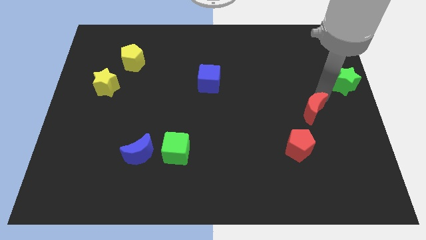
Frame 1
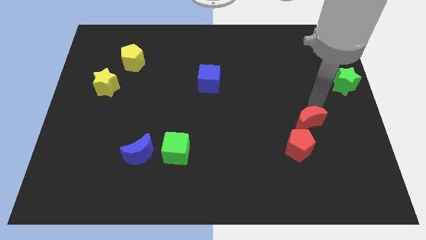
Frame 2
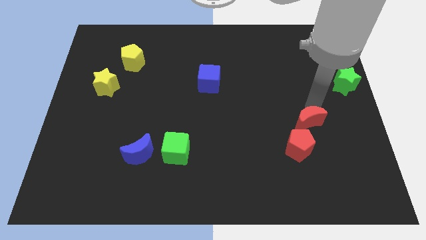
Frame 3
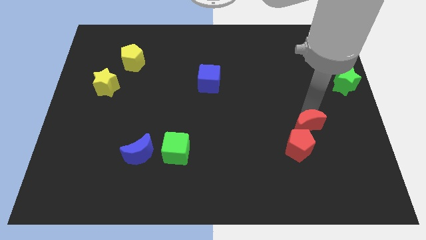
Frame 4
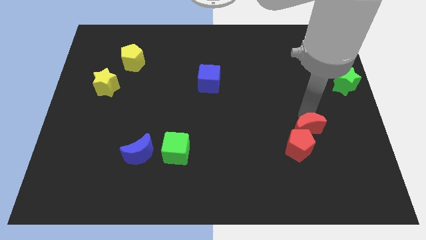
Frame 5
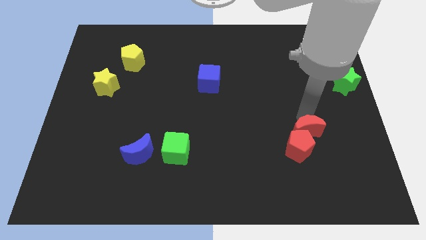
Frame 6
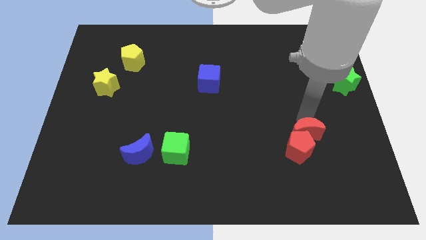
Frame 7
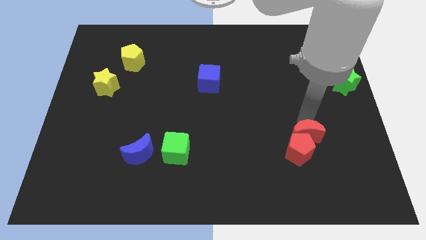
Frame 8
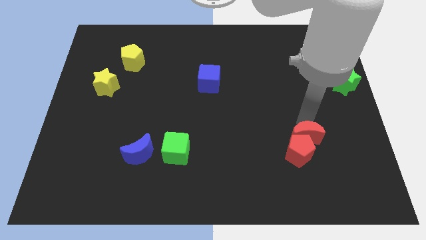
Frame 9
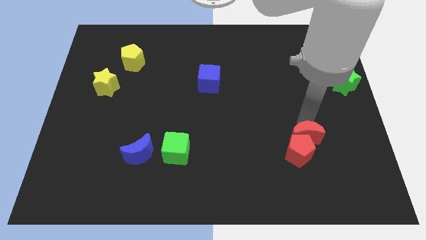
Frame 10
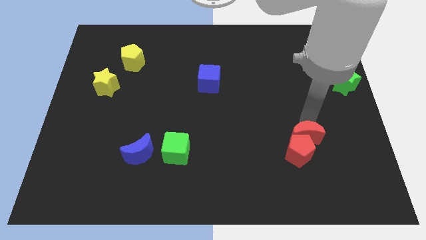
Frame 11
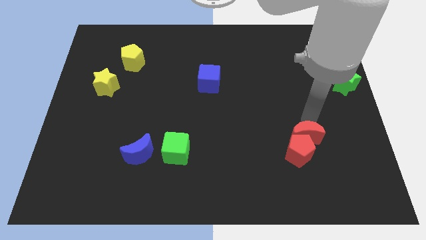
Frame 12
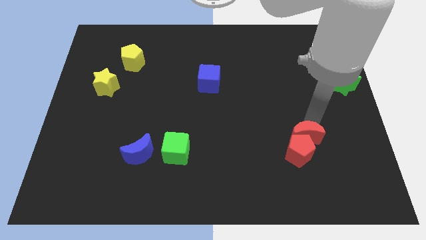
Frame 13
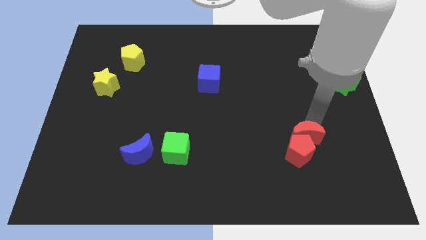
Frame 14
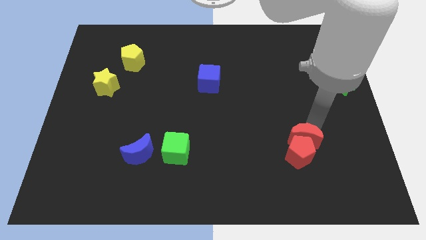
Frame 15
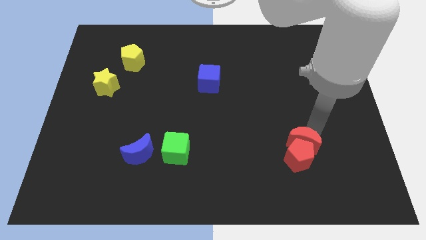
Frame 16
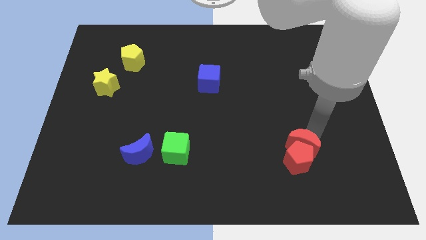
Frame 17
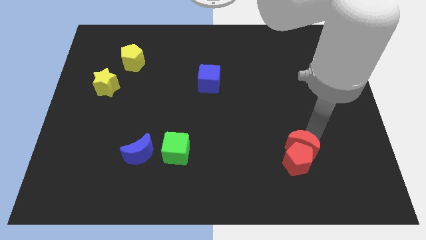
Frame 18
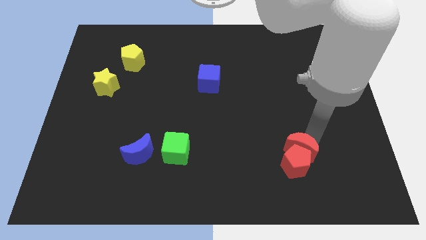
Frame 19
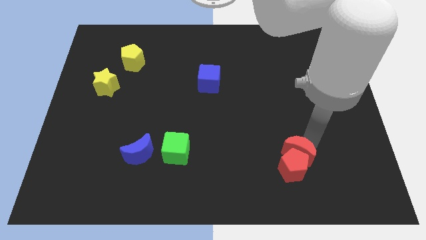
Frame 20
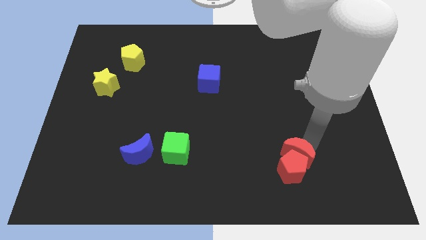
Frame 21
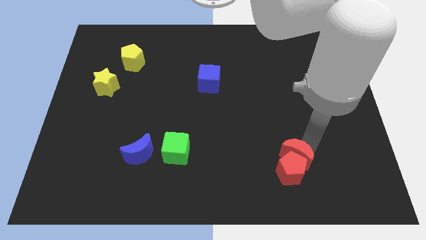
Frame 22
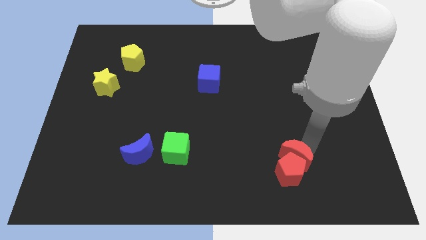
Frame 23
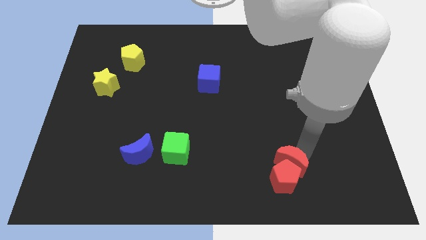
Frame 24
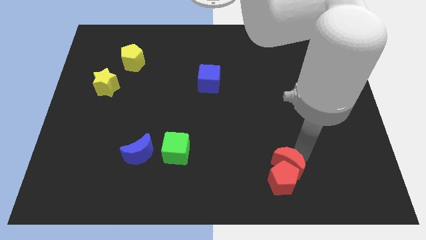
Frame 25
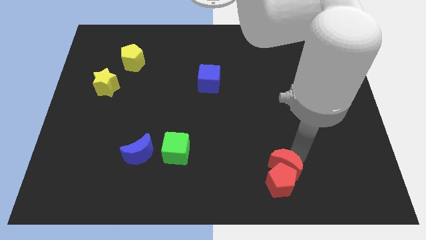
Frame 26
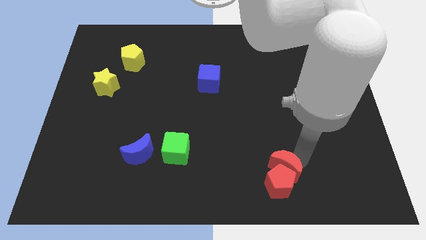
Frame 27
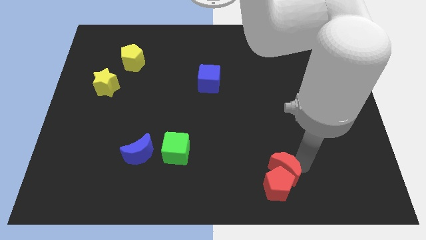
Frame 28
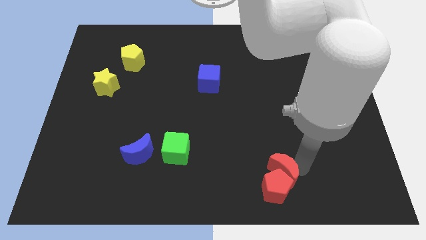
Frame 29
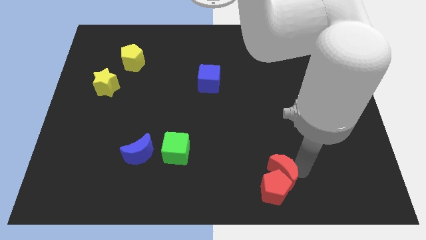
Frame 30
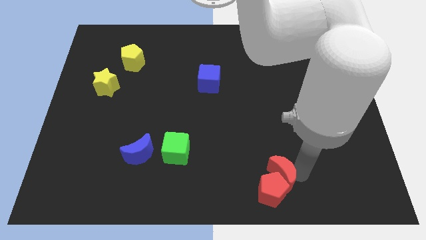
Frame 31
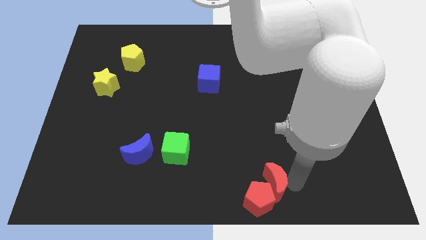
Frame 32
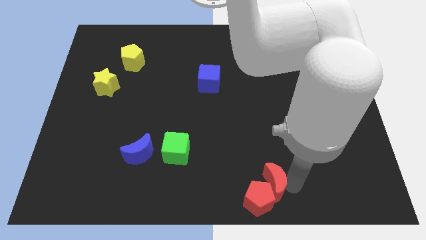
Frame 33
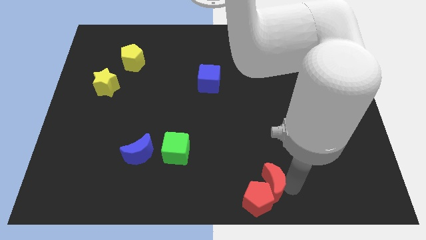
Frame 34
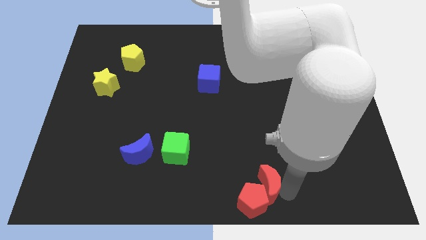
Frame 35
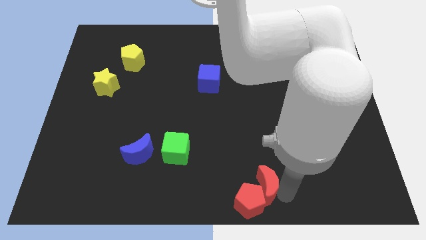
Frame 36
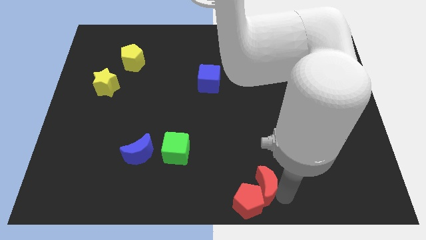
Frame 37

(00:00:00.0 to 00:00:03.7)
place the red blocks to the bottom center of the board

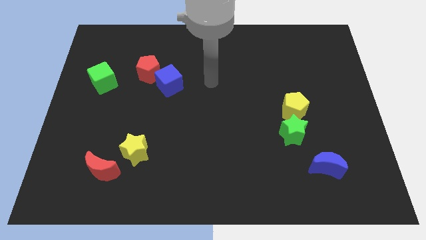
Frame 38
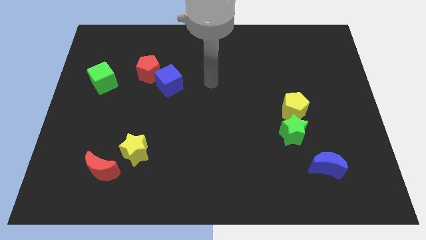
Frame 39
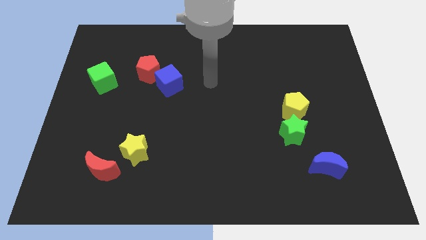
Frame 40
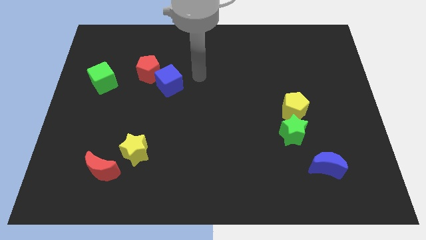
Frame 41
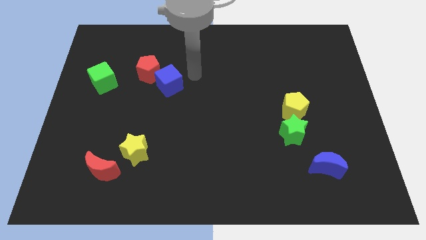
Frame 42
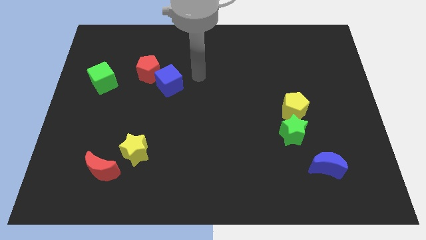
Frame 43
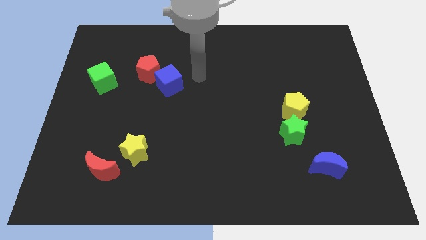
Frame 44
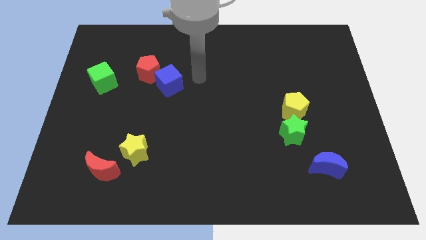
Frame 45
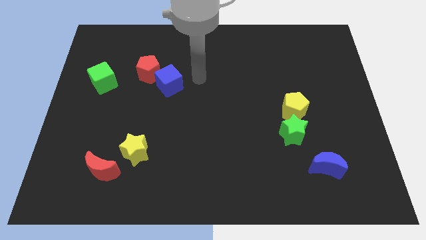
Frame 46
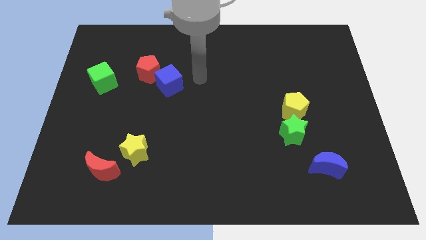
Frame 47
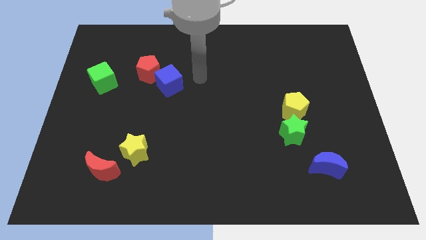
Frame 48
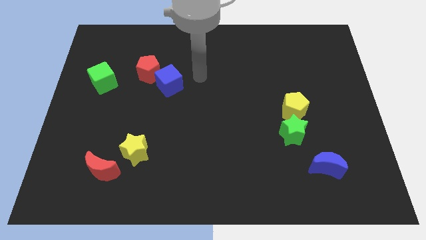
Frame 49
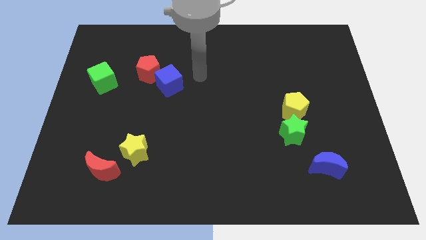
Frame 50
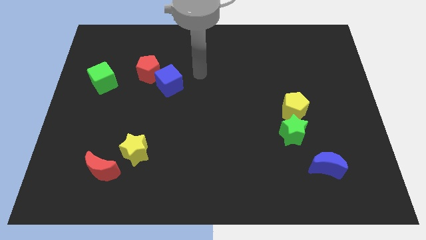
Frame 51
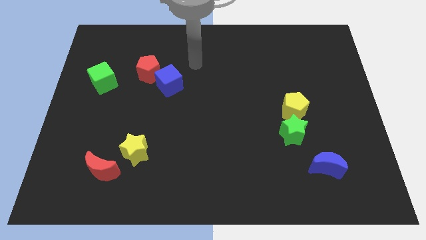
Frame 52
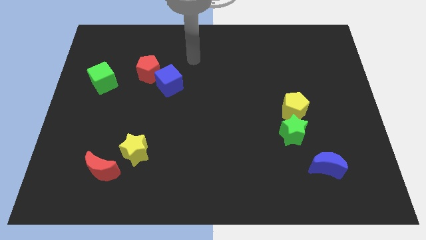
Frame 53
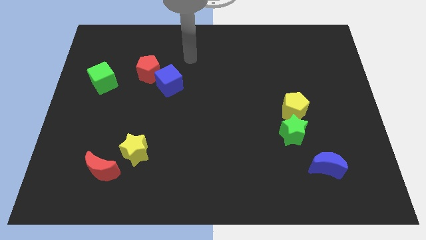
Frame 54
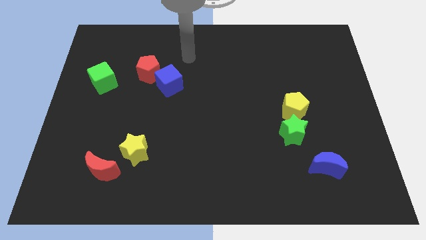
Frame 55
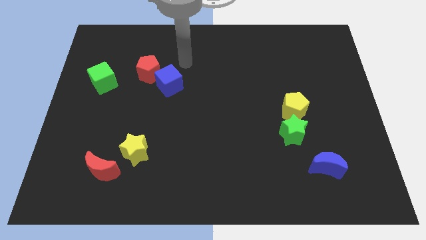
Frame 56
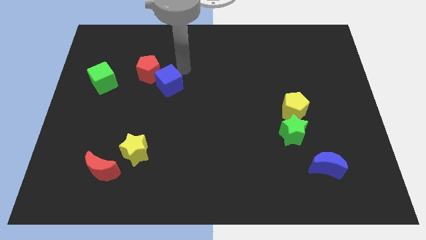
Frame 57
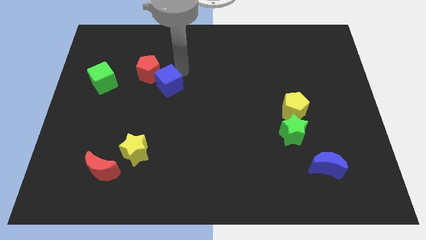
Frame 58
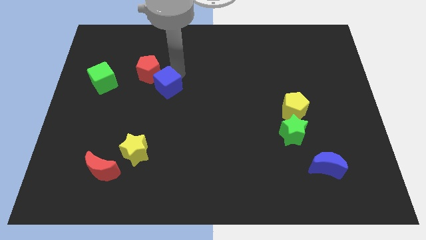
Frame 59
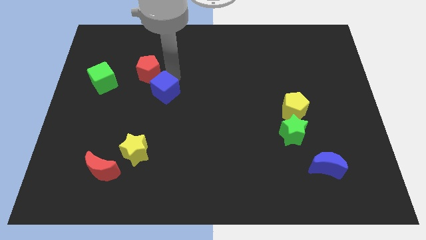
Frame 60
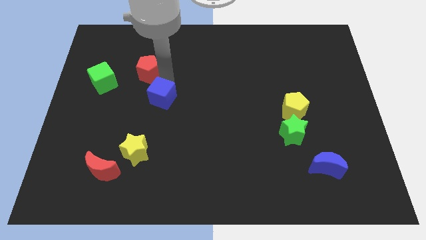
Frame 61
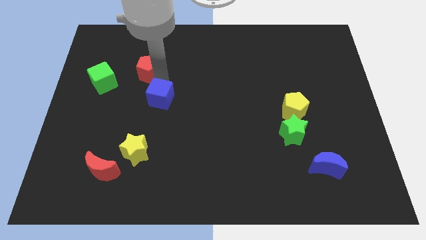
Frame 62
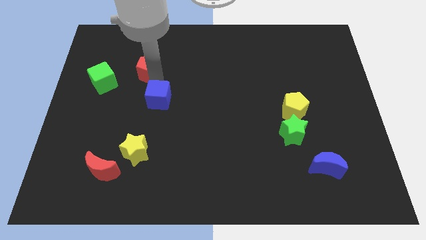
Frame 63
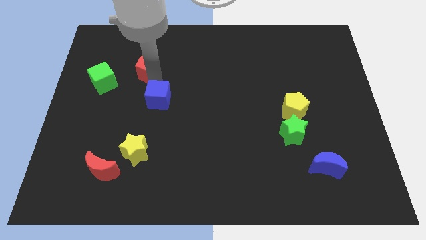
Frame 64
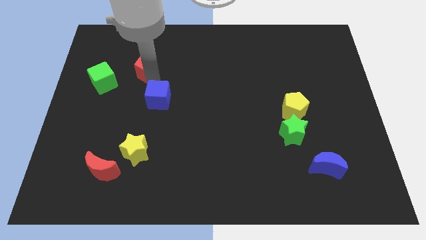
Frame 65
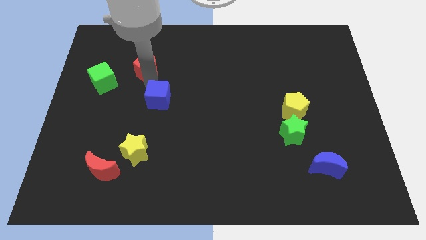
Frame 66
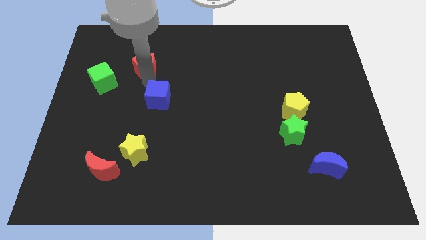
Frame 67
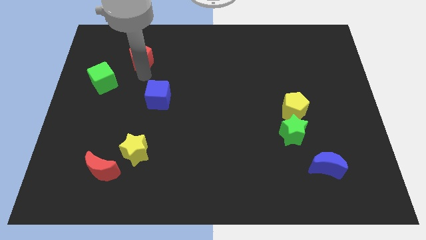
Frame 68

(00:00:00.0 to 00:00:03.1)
separate the blue cube from the red pentagon

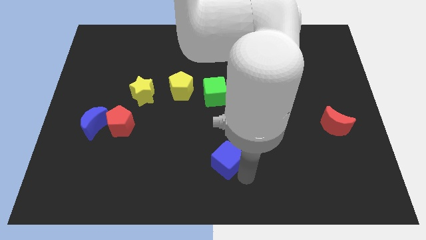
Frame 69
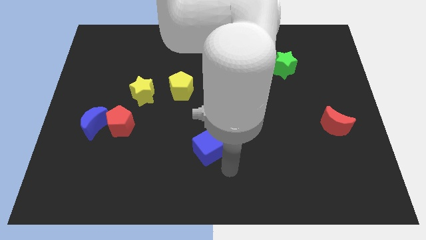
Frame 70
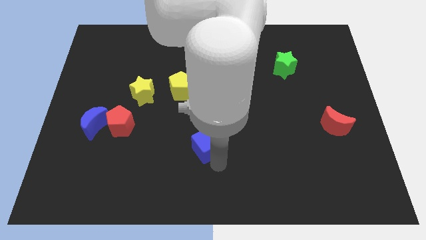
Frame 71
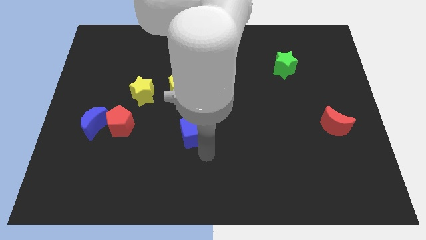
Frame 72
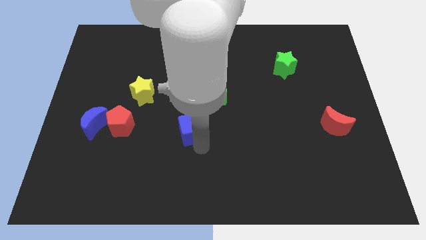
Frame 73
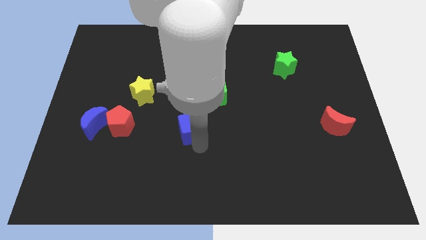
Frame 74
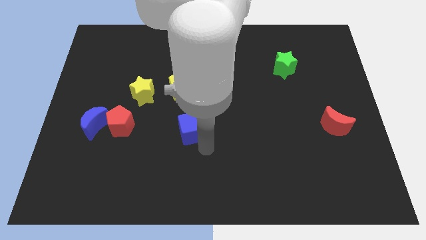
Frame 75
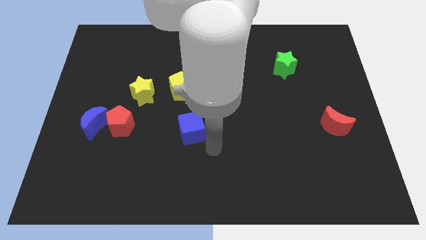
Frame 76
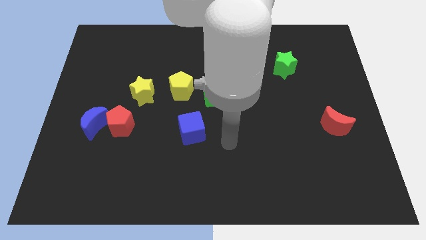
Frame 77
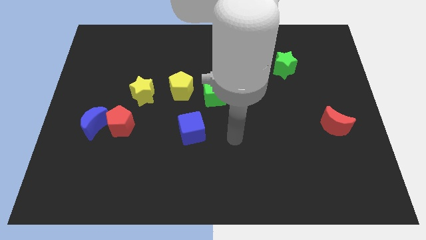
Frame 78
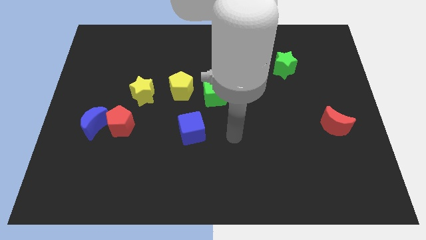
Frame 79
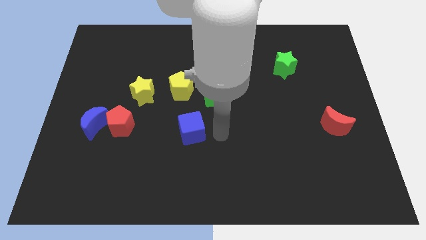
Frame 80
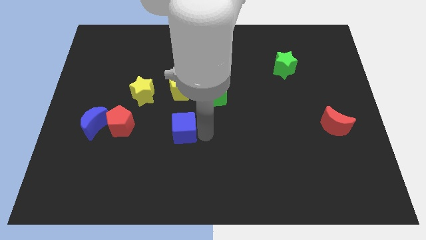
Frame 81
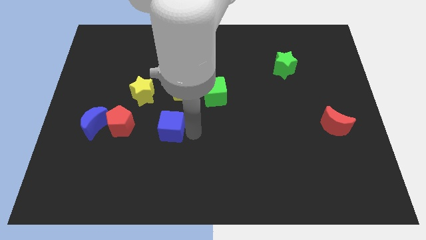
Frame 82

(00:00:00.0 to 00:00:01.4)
drag the blue cube slightly upwards

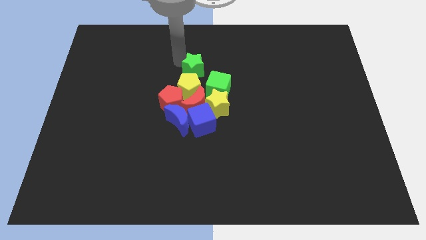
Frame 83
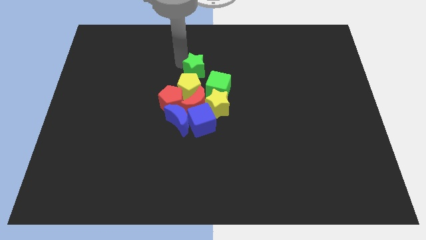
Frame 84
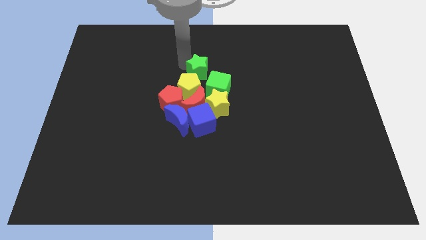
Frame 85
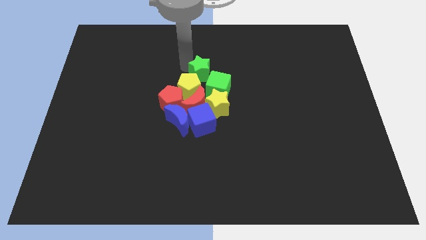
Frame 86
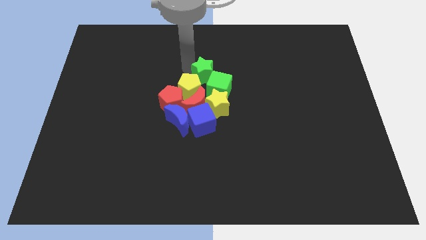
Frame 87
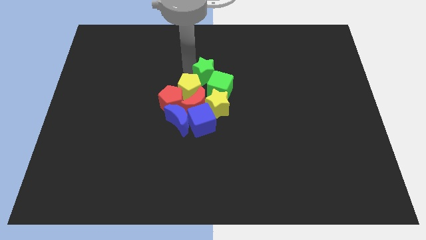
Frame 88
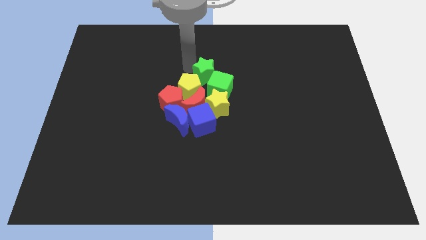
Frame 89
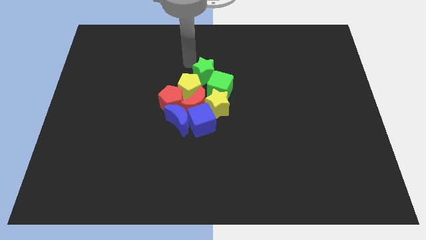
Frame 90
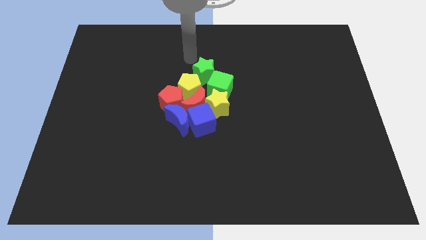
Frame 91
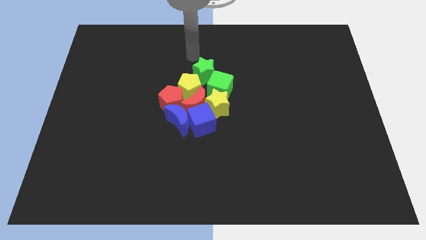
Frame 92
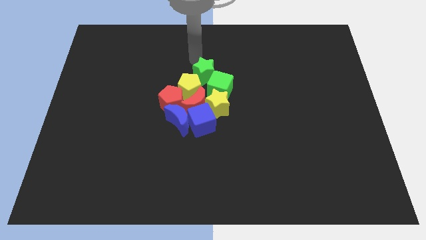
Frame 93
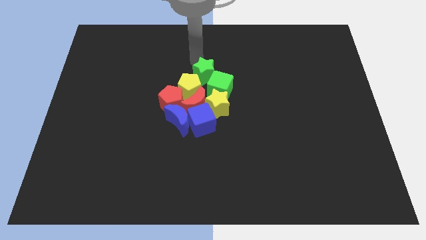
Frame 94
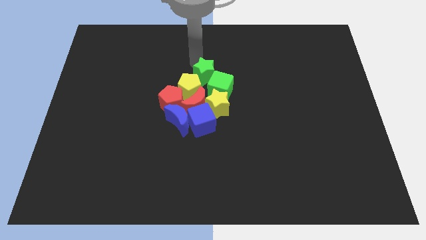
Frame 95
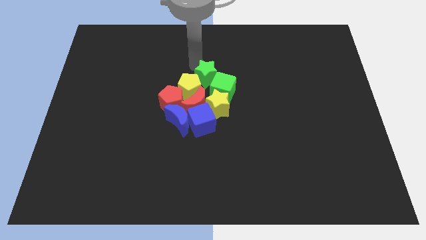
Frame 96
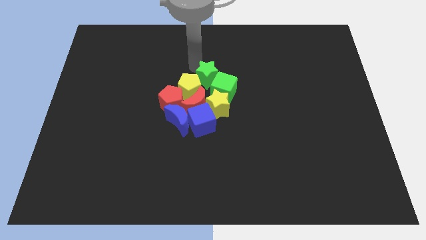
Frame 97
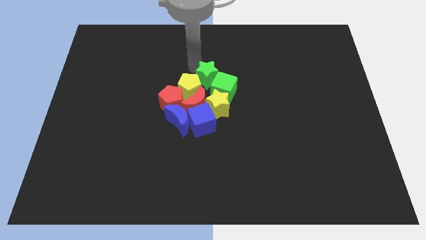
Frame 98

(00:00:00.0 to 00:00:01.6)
drag the green star into the group of blocks at the center of the table
